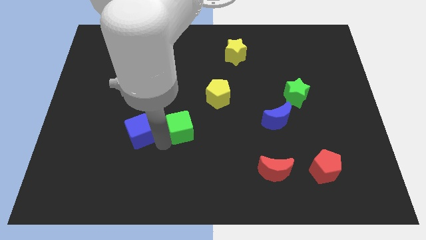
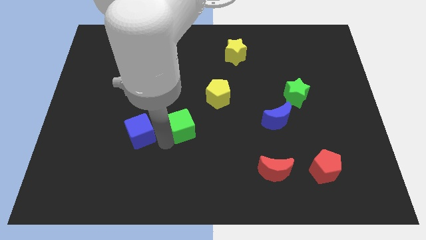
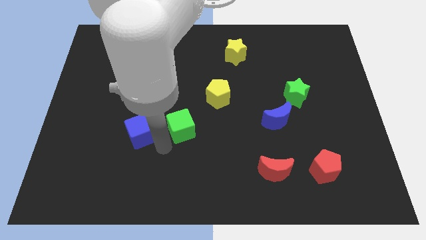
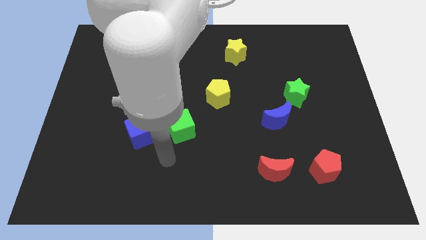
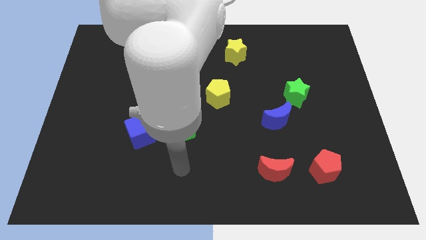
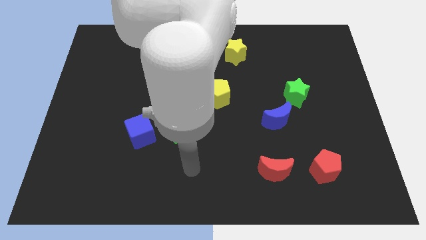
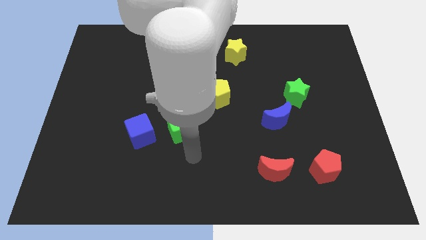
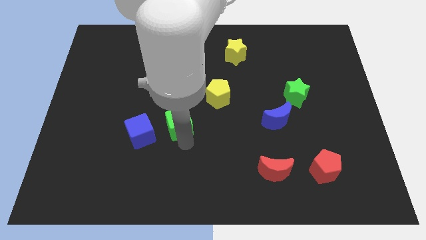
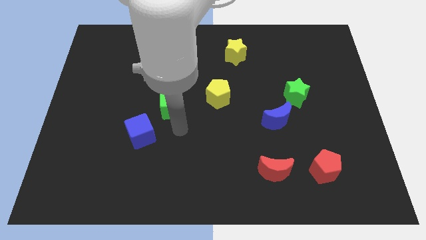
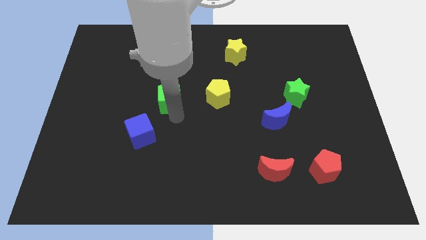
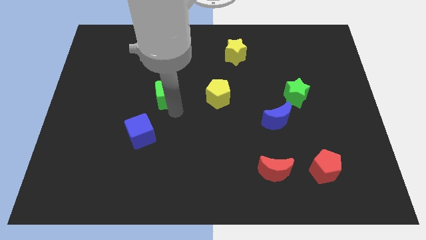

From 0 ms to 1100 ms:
move green cube up to the left of yellow pentagon

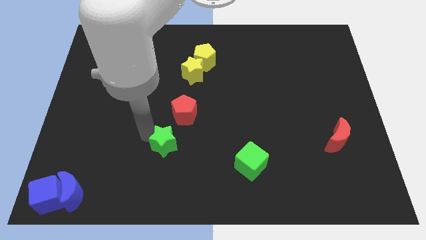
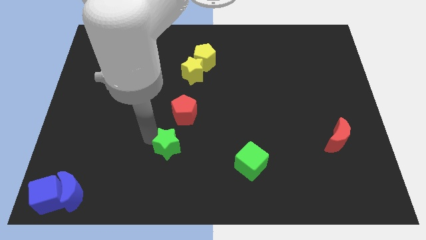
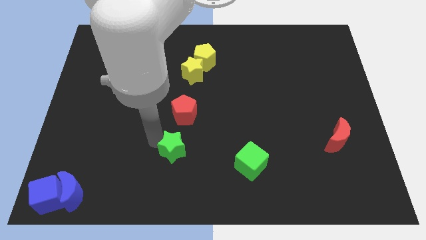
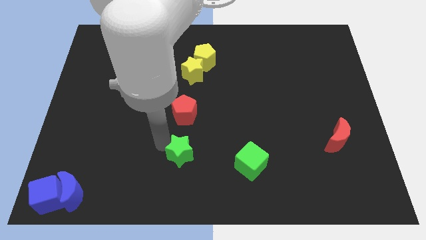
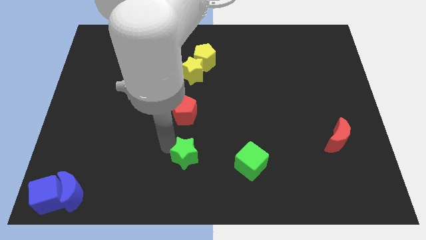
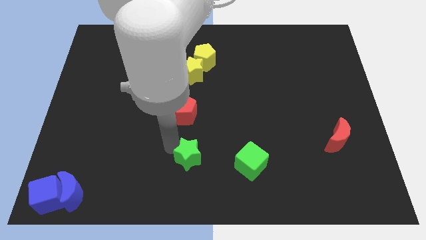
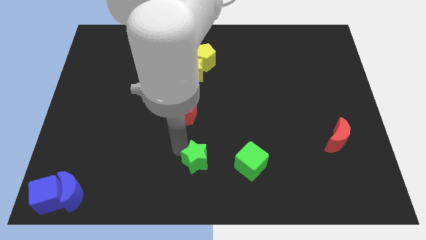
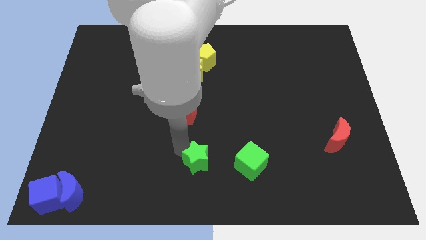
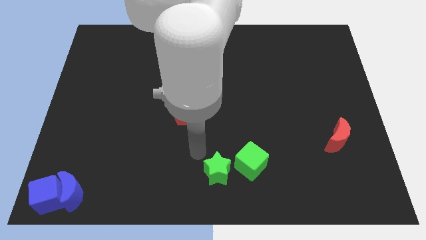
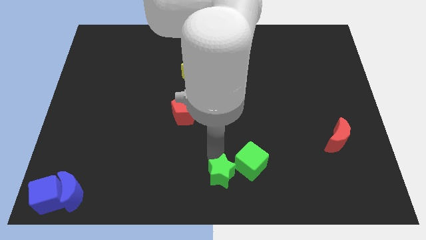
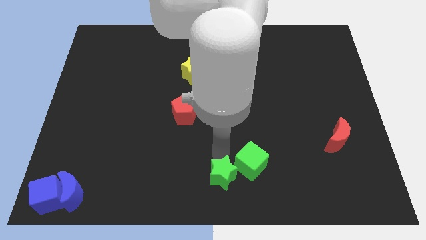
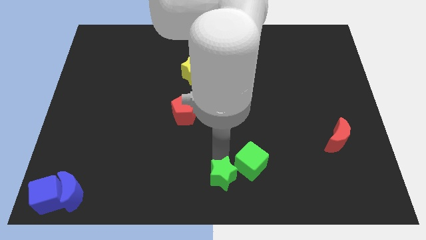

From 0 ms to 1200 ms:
place the green star to the left side of green cube

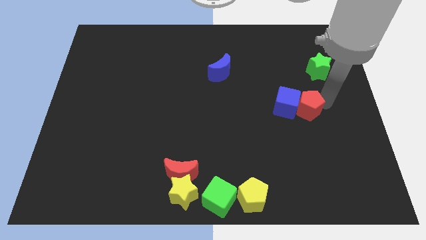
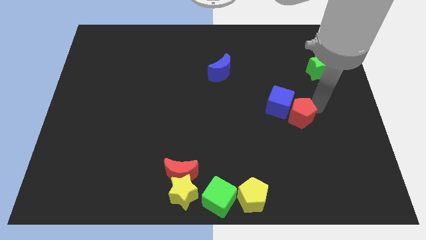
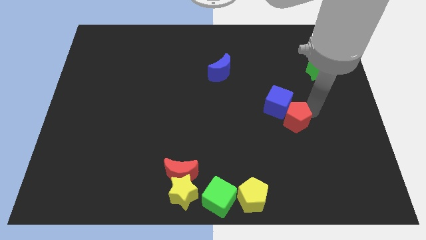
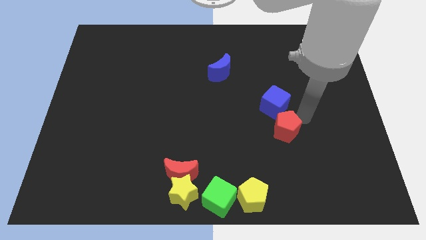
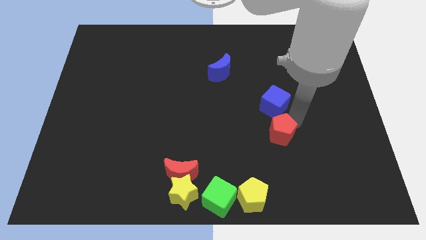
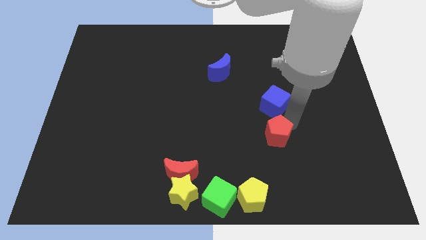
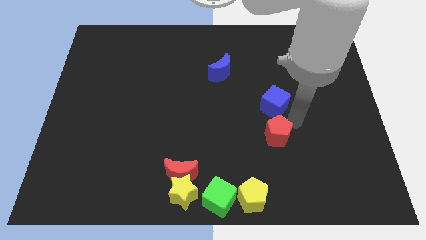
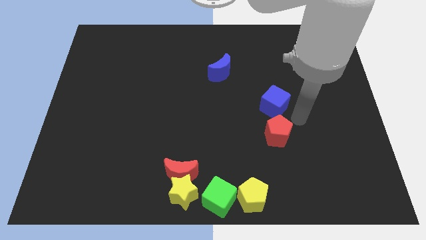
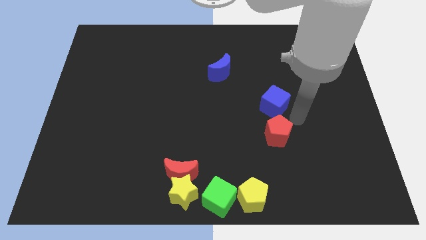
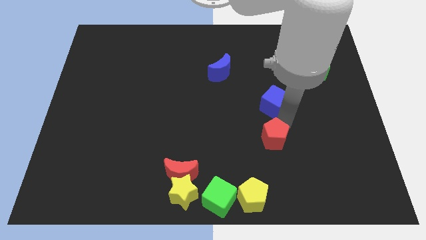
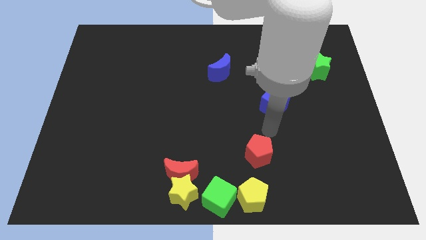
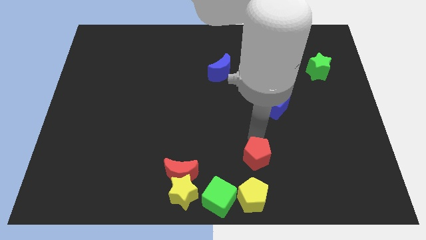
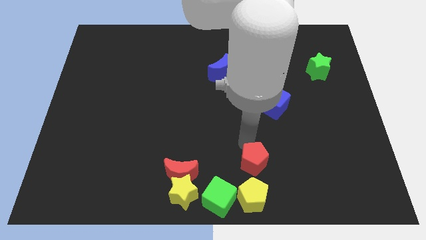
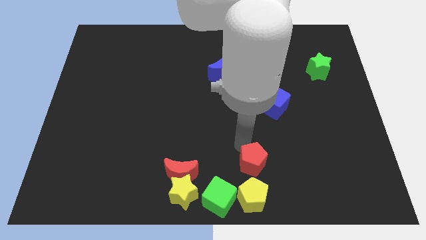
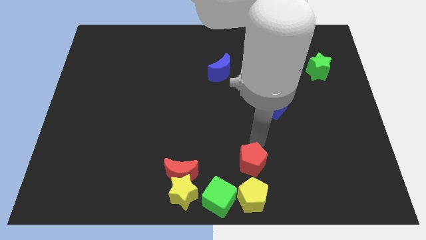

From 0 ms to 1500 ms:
move red pentagon below the blue cube

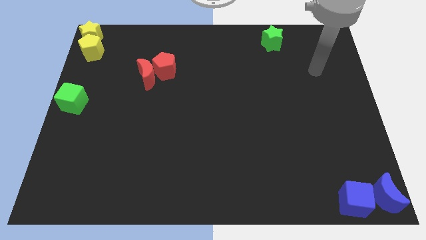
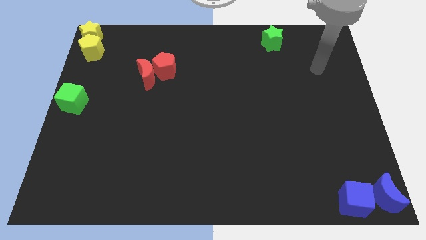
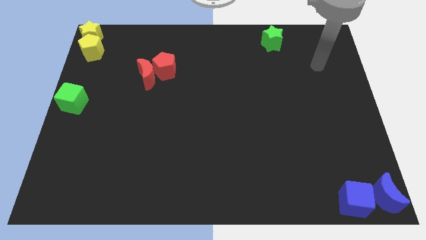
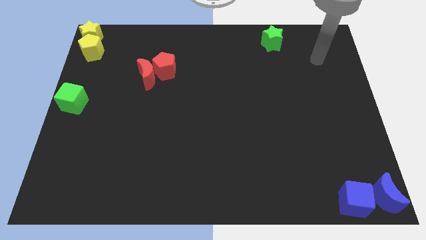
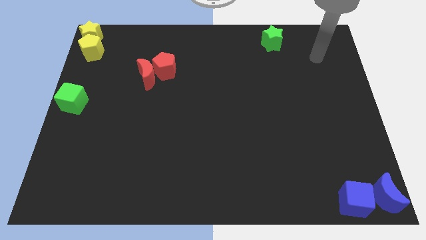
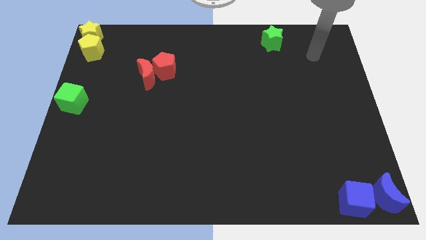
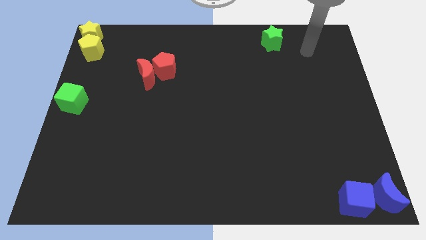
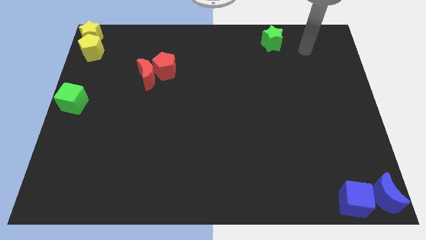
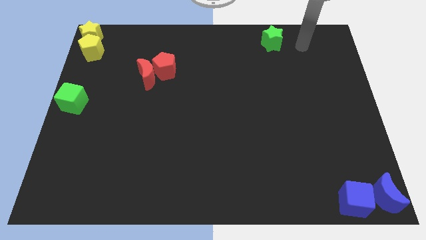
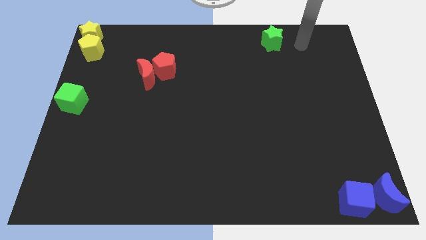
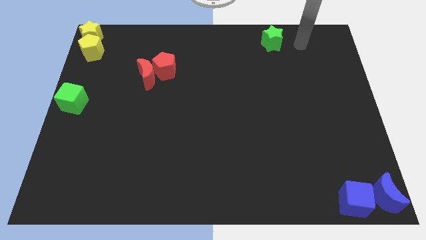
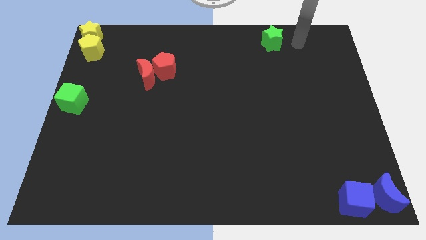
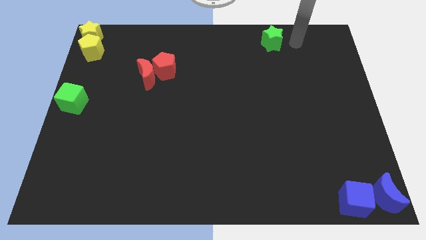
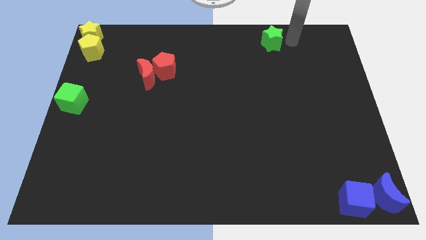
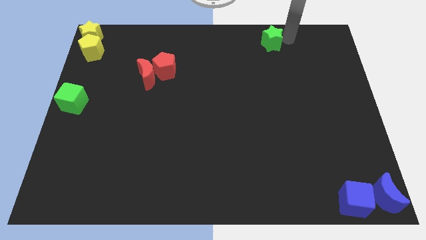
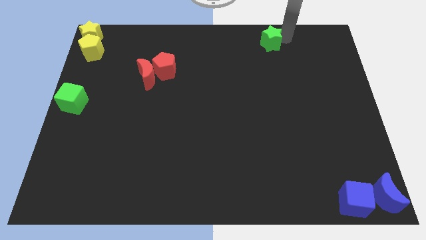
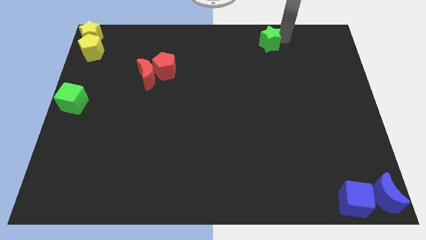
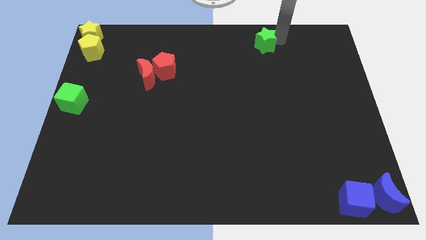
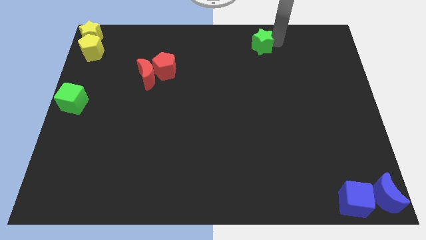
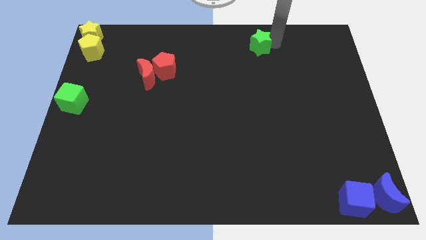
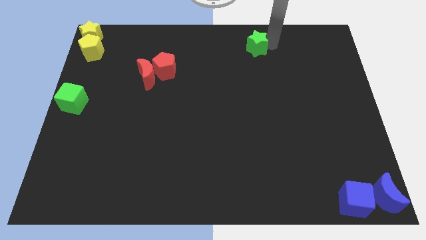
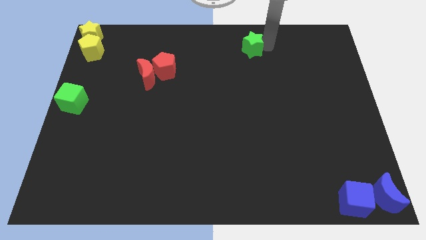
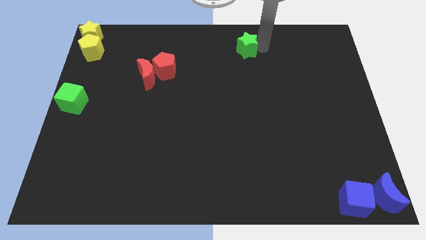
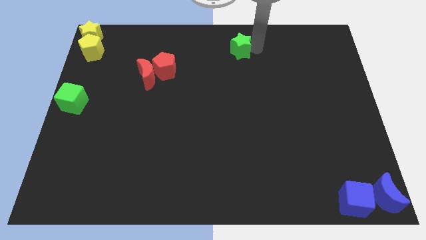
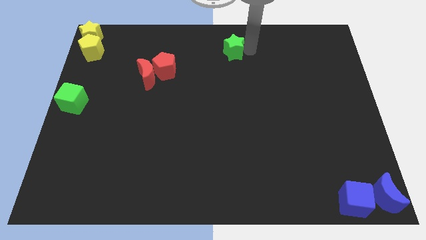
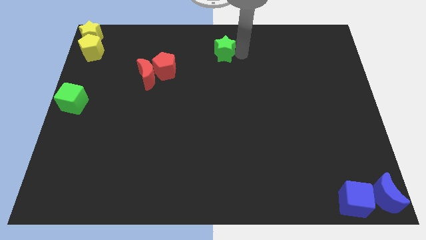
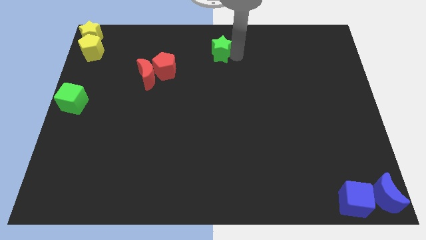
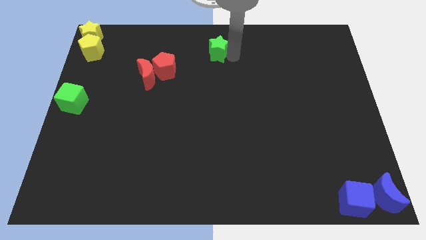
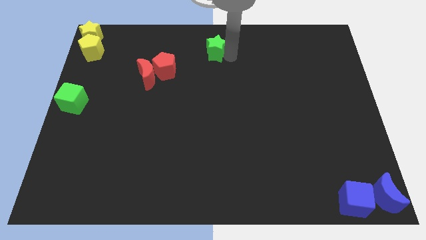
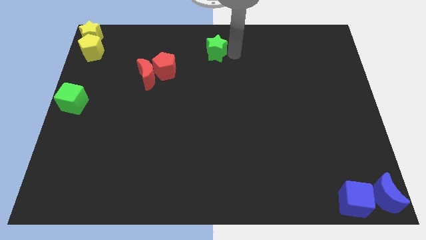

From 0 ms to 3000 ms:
push the green star to the top center of the board

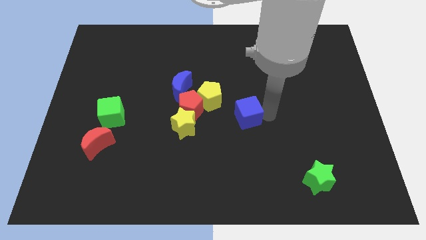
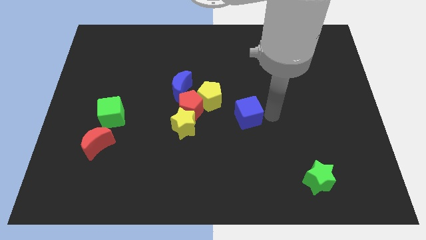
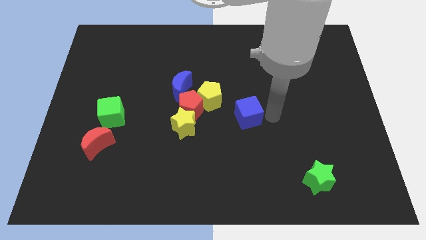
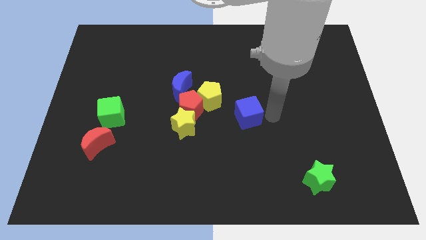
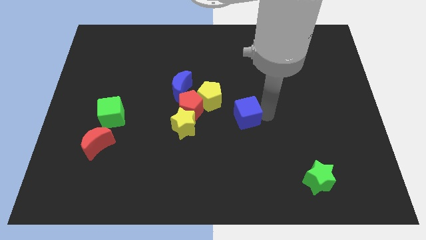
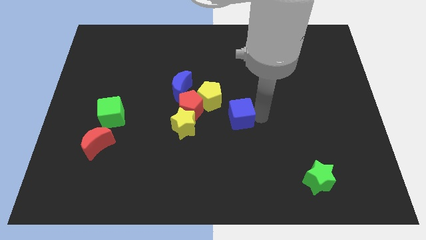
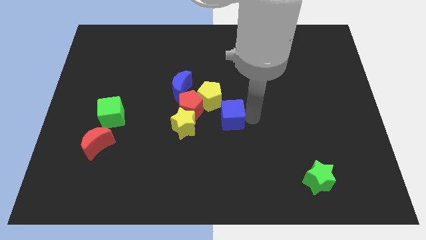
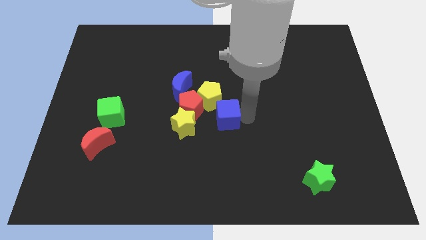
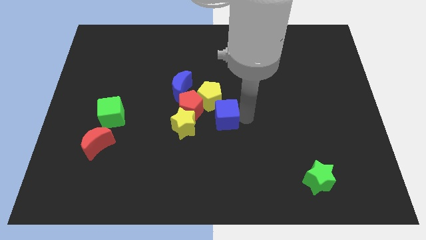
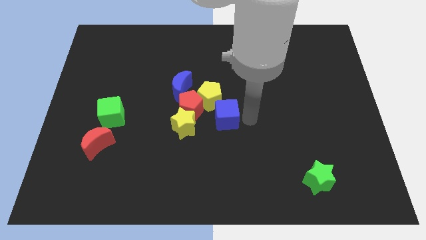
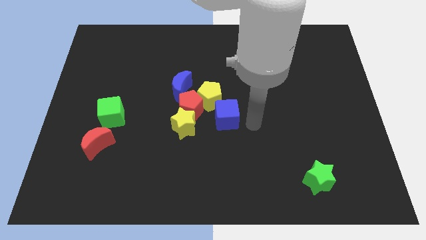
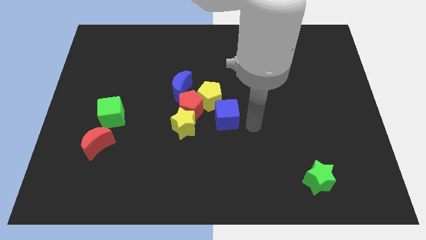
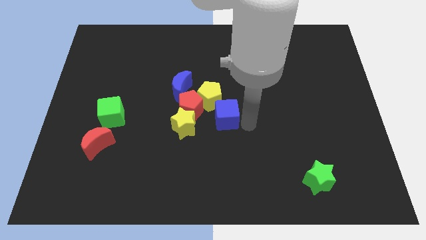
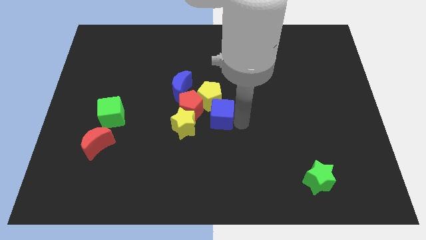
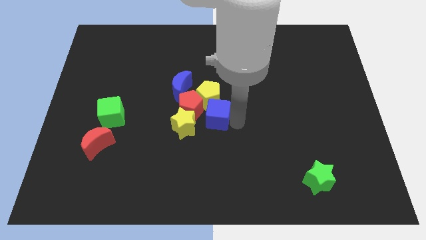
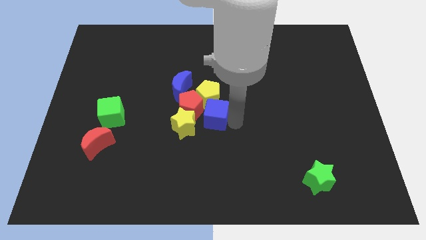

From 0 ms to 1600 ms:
push the blue cube into yellow pentagon

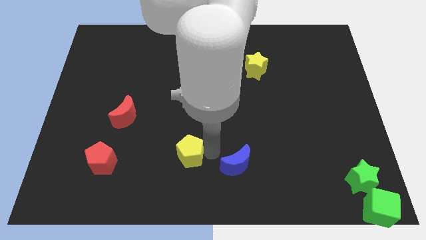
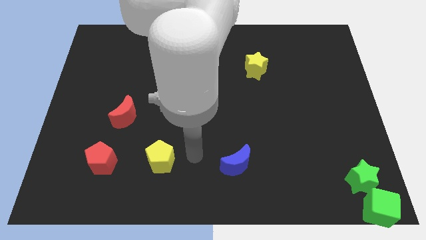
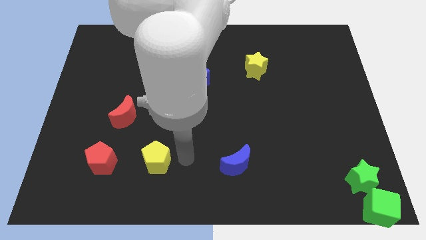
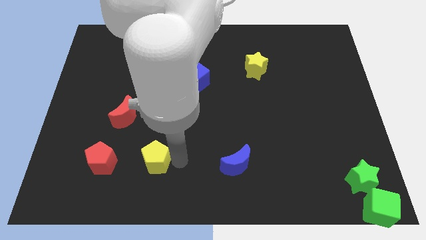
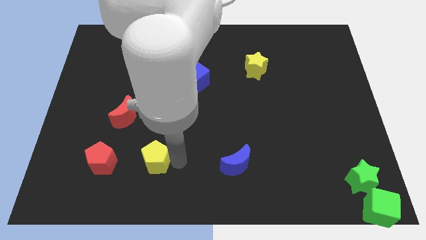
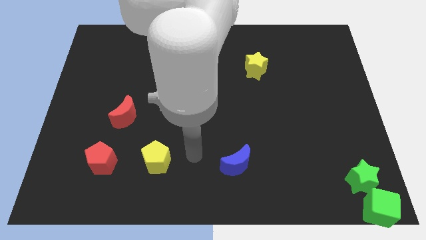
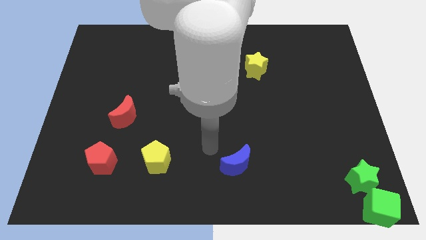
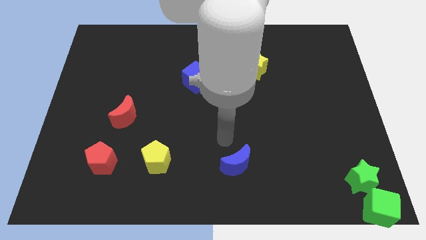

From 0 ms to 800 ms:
put the yellow pentagon in between the red pentagon and blue moon
